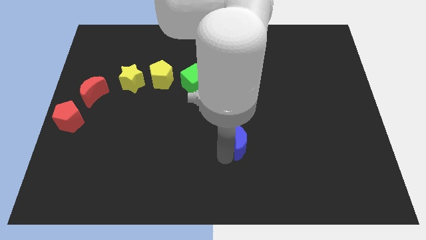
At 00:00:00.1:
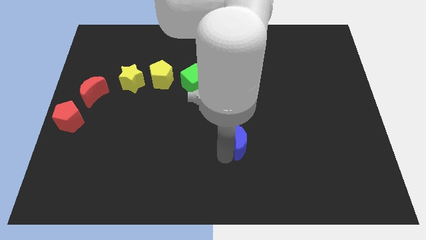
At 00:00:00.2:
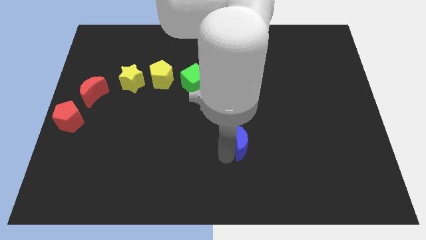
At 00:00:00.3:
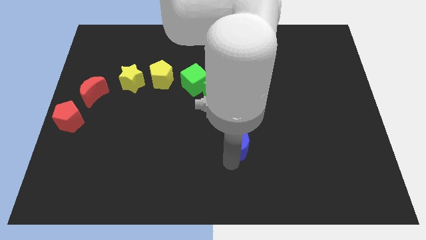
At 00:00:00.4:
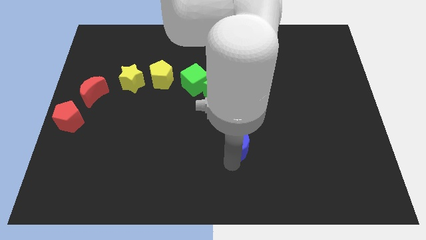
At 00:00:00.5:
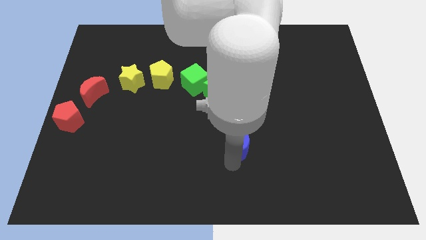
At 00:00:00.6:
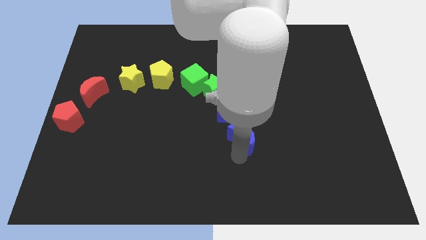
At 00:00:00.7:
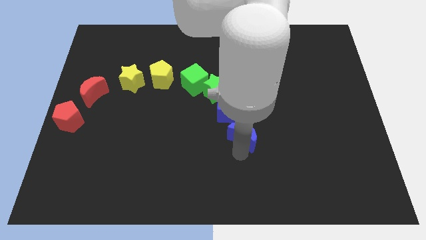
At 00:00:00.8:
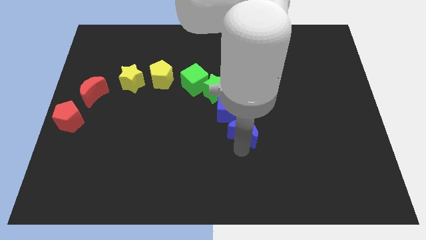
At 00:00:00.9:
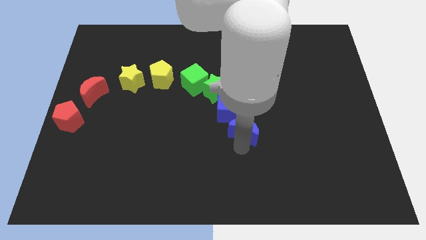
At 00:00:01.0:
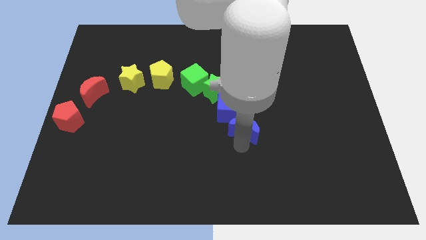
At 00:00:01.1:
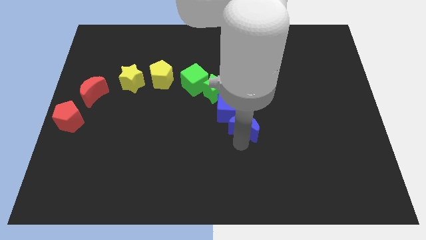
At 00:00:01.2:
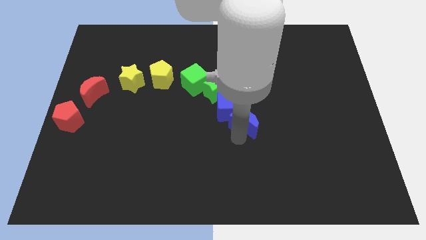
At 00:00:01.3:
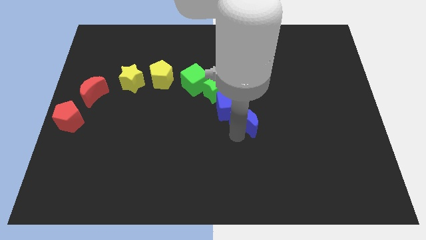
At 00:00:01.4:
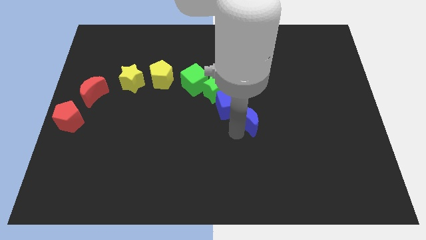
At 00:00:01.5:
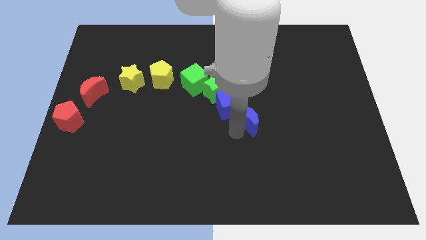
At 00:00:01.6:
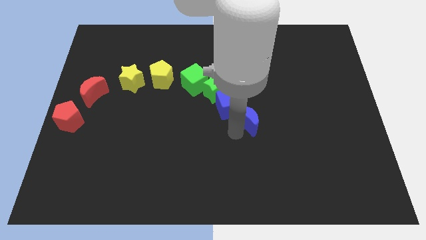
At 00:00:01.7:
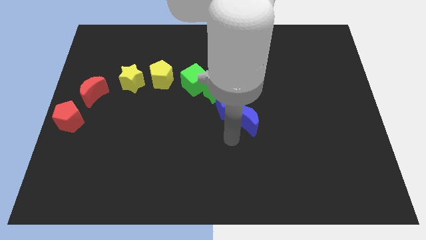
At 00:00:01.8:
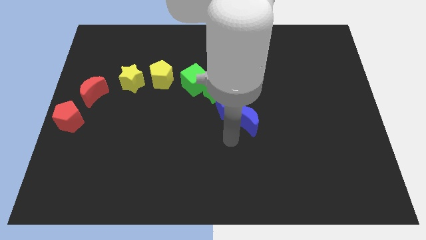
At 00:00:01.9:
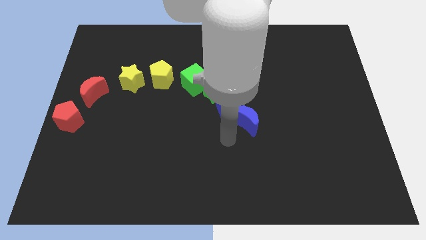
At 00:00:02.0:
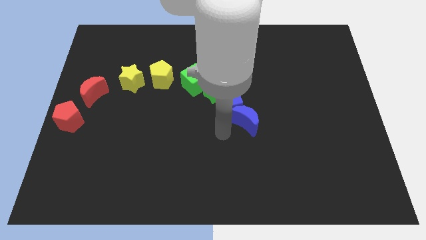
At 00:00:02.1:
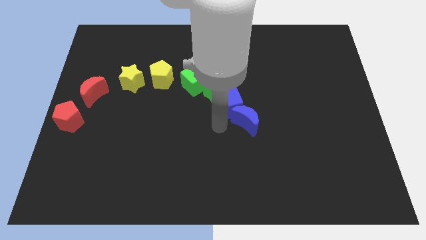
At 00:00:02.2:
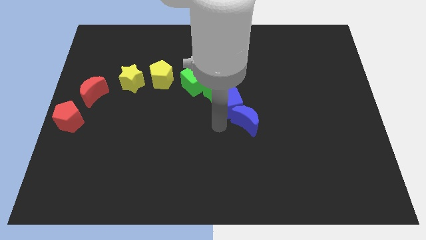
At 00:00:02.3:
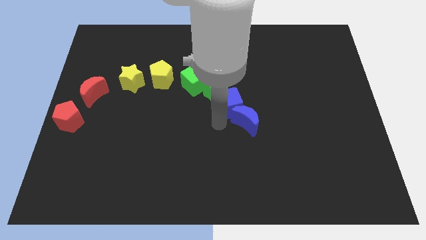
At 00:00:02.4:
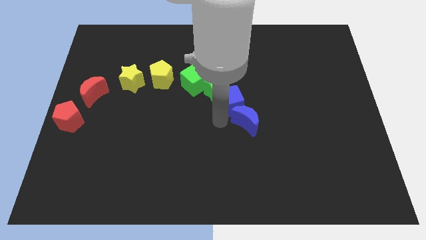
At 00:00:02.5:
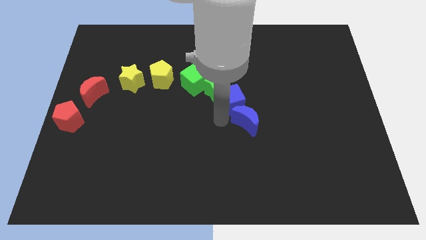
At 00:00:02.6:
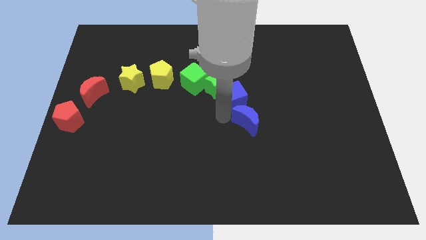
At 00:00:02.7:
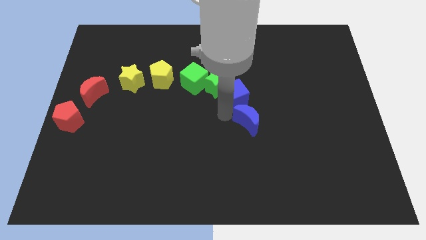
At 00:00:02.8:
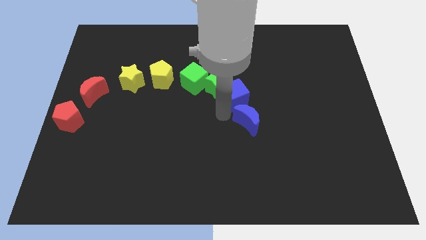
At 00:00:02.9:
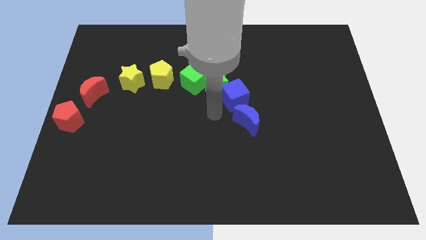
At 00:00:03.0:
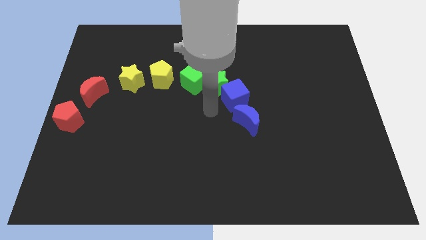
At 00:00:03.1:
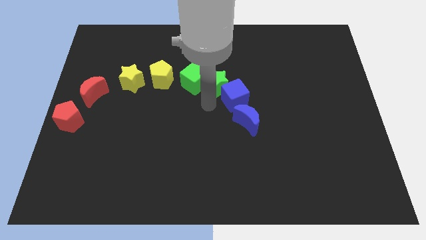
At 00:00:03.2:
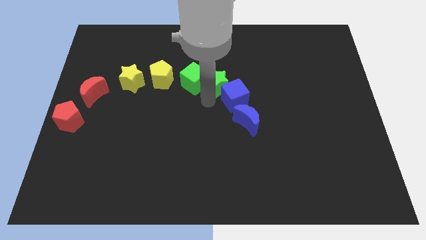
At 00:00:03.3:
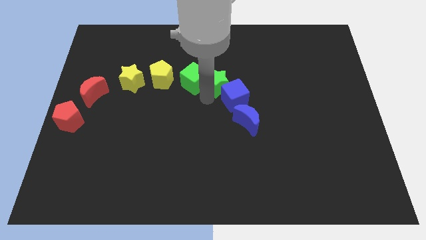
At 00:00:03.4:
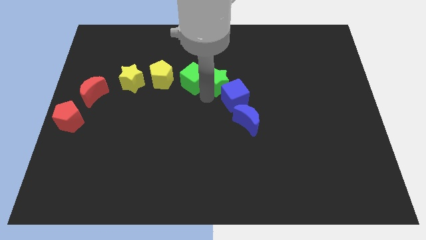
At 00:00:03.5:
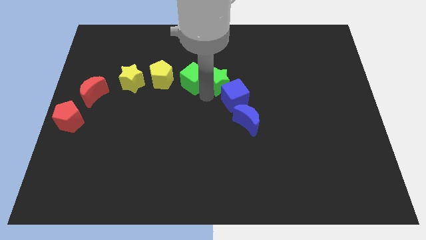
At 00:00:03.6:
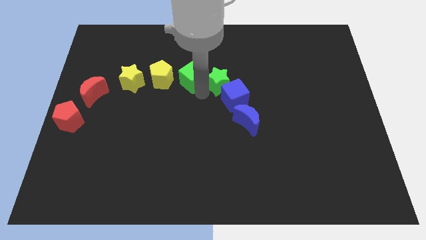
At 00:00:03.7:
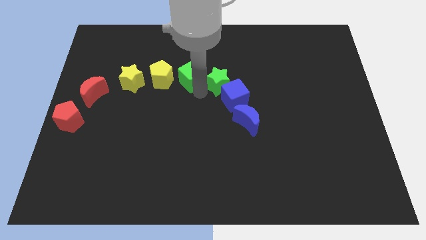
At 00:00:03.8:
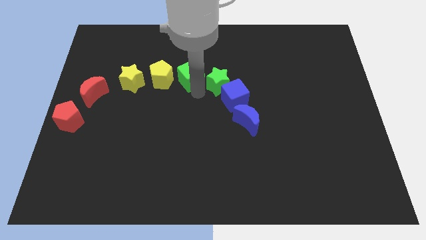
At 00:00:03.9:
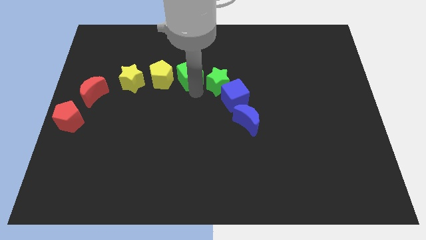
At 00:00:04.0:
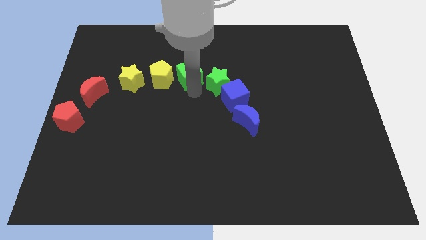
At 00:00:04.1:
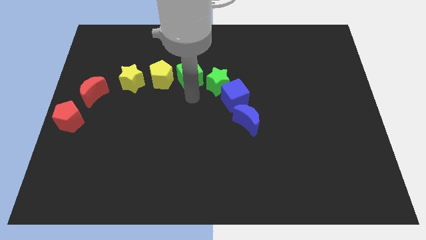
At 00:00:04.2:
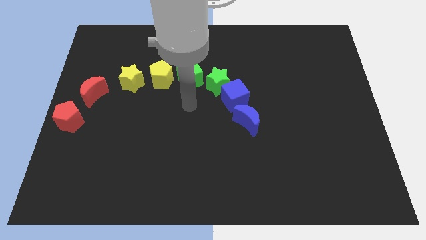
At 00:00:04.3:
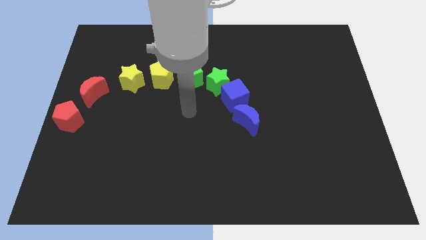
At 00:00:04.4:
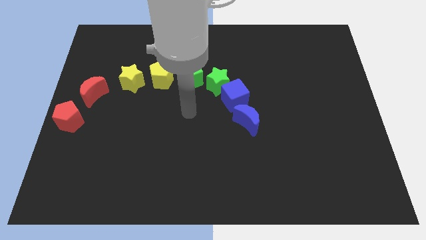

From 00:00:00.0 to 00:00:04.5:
form a semi circle by adjusting the group of blocks

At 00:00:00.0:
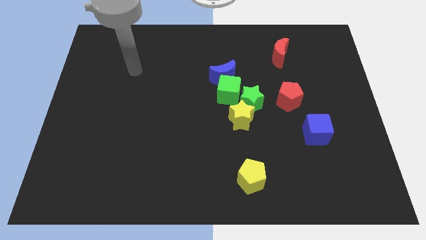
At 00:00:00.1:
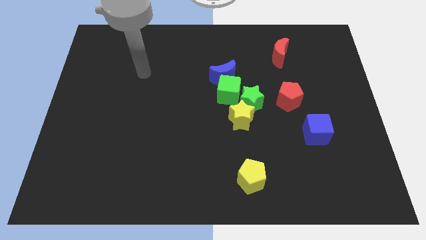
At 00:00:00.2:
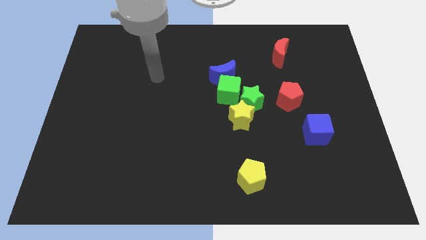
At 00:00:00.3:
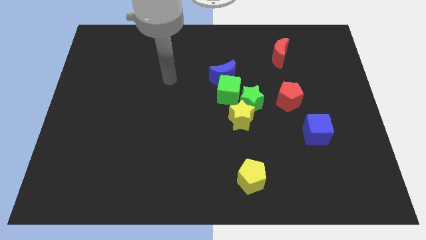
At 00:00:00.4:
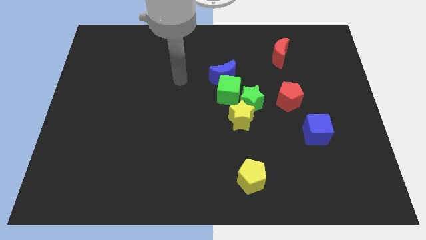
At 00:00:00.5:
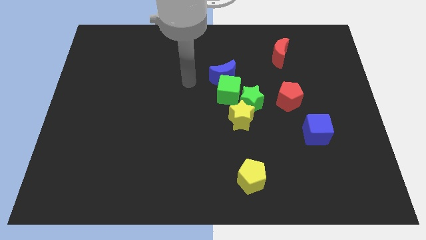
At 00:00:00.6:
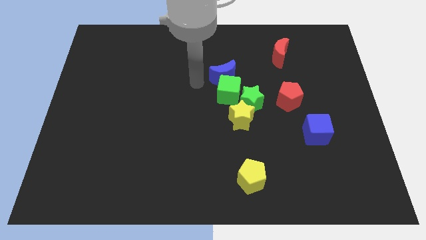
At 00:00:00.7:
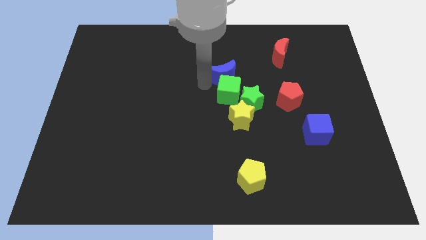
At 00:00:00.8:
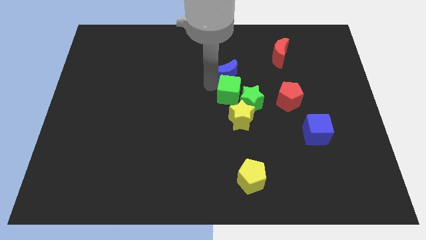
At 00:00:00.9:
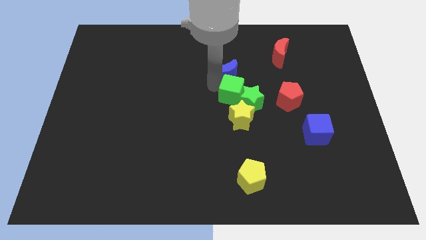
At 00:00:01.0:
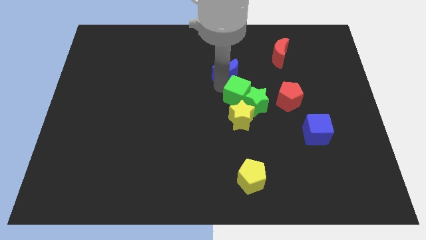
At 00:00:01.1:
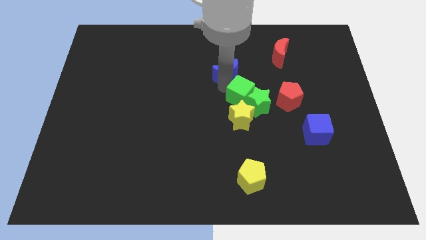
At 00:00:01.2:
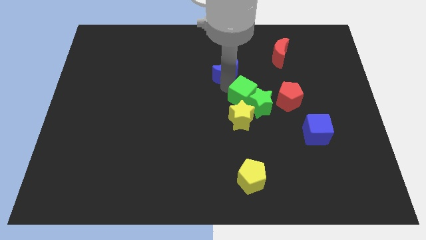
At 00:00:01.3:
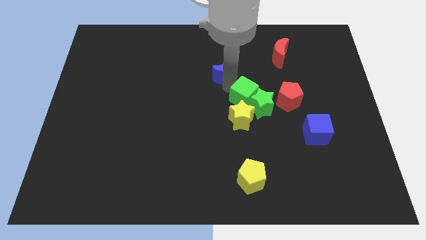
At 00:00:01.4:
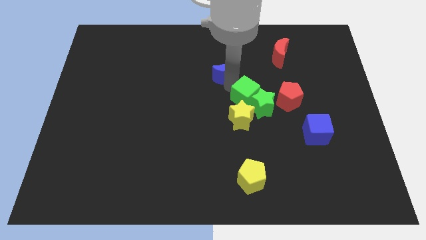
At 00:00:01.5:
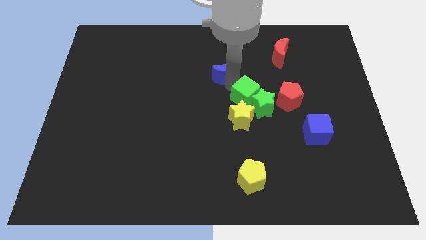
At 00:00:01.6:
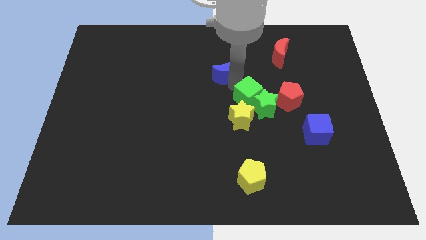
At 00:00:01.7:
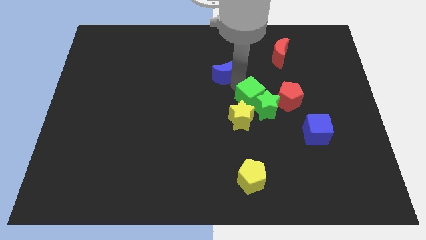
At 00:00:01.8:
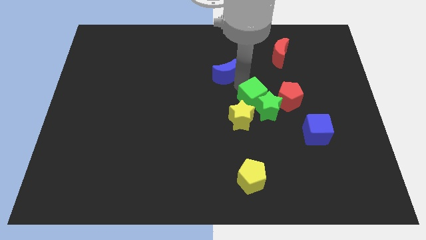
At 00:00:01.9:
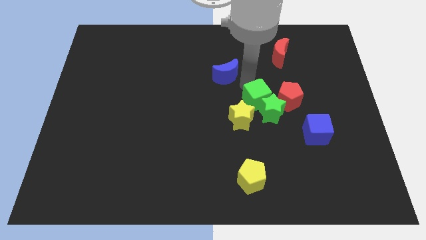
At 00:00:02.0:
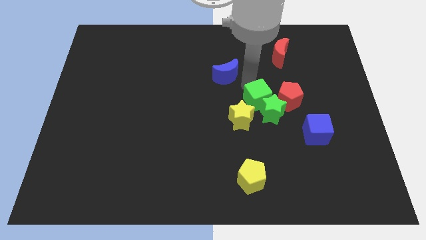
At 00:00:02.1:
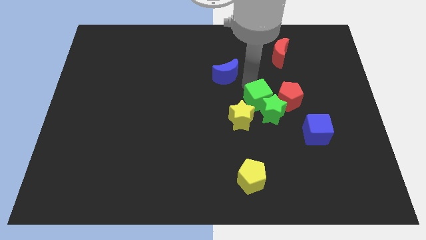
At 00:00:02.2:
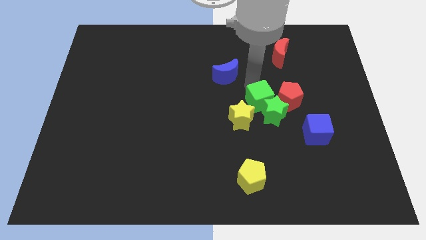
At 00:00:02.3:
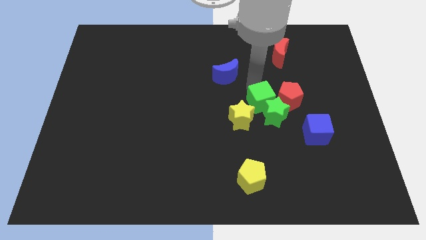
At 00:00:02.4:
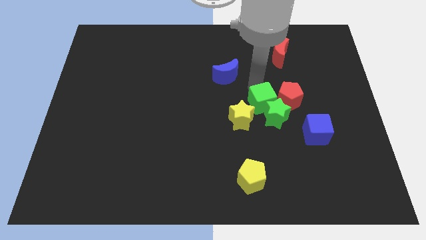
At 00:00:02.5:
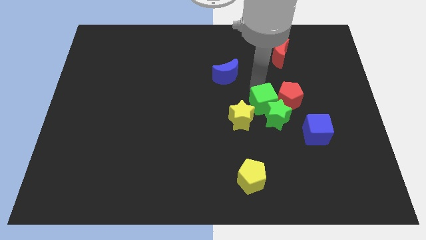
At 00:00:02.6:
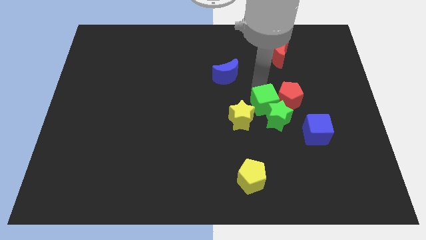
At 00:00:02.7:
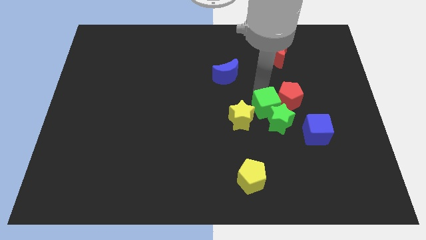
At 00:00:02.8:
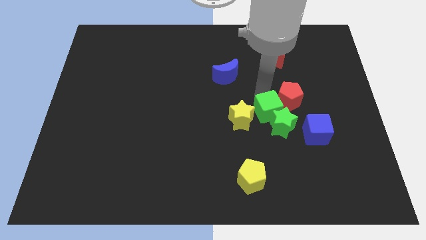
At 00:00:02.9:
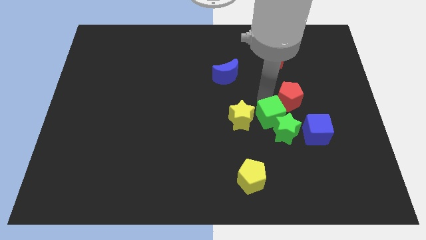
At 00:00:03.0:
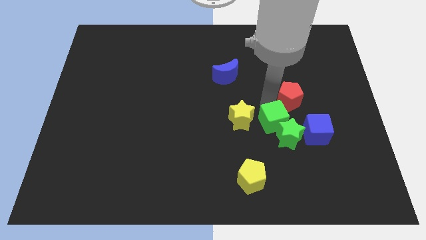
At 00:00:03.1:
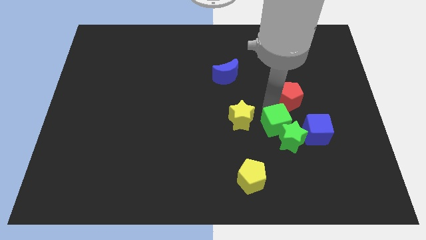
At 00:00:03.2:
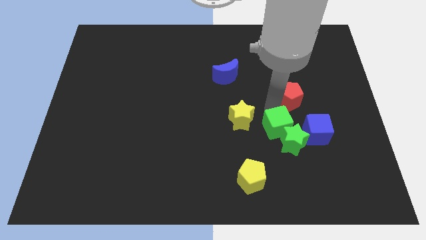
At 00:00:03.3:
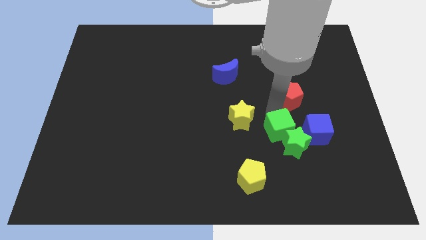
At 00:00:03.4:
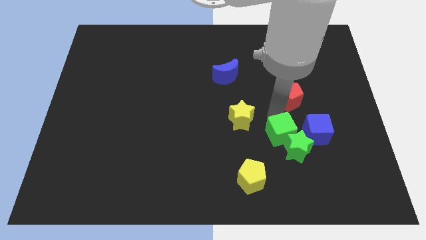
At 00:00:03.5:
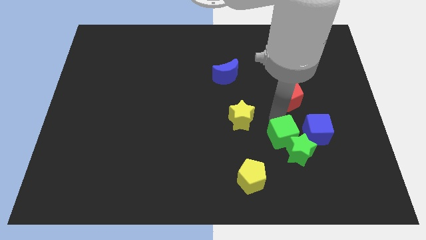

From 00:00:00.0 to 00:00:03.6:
push the green blocks together to the left of the blue cube

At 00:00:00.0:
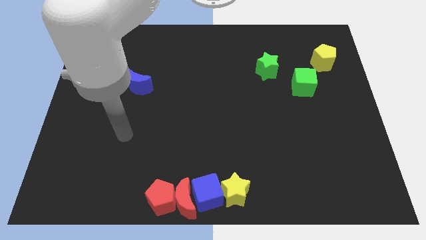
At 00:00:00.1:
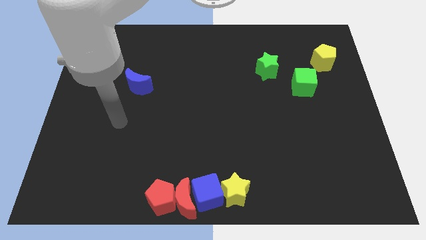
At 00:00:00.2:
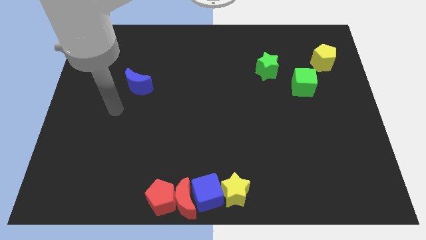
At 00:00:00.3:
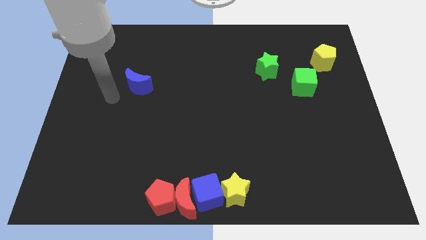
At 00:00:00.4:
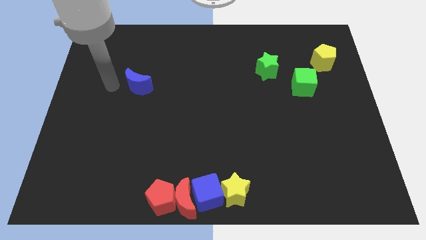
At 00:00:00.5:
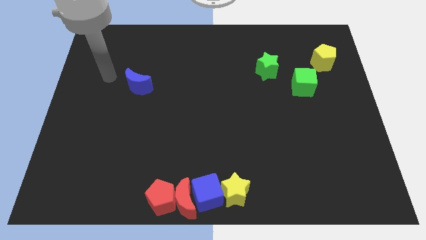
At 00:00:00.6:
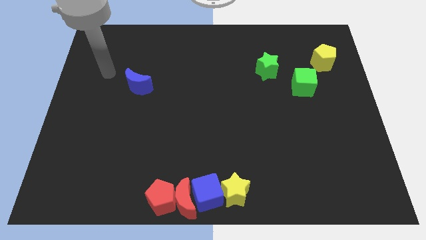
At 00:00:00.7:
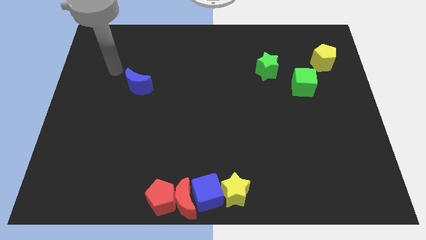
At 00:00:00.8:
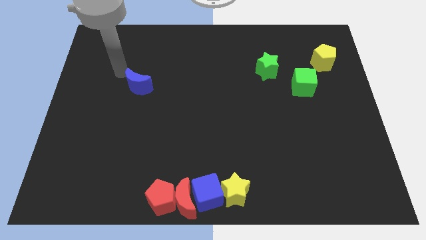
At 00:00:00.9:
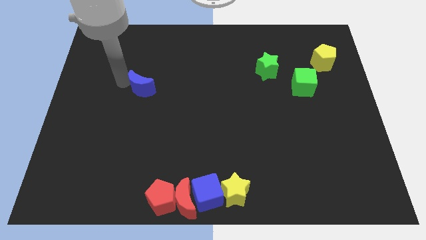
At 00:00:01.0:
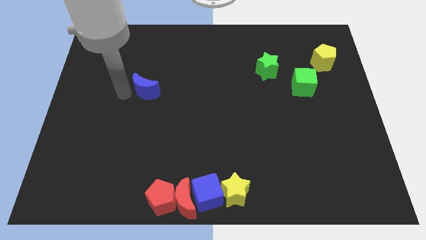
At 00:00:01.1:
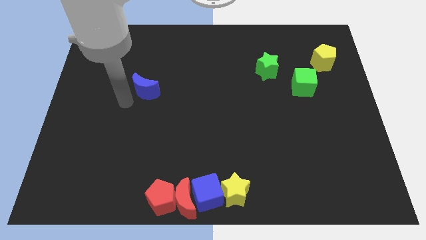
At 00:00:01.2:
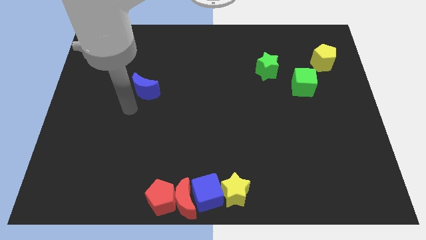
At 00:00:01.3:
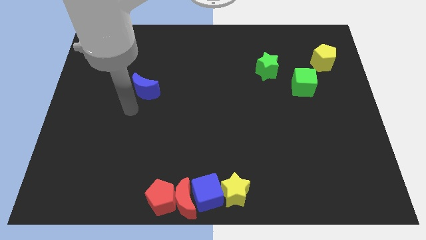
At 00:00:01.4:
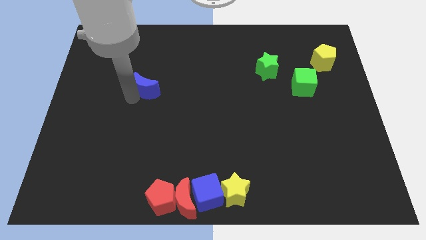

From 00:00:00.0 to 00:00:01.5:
slightly move the blue moon towards the right
